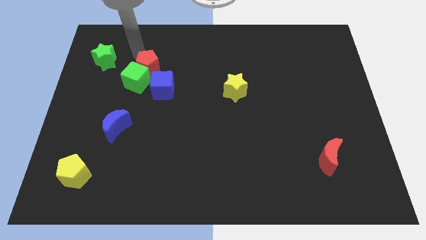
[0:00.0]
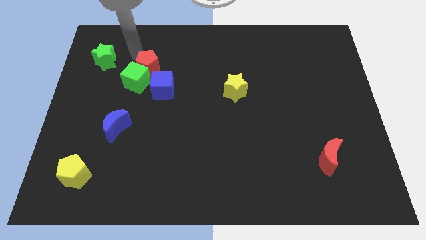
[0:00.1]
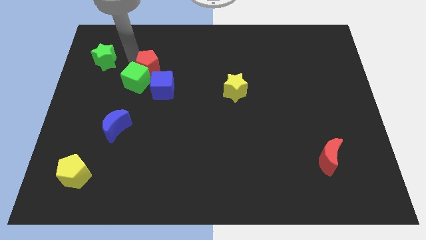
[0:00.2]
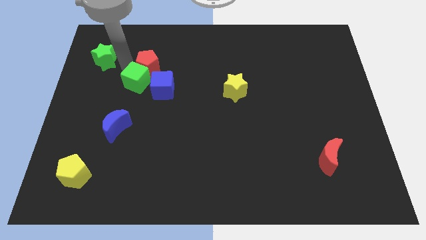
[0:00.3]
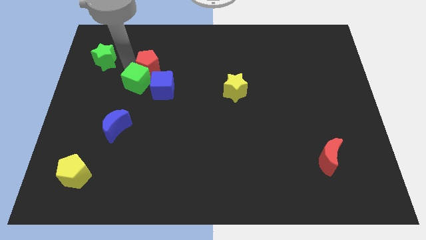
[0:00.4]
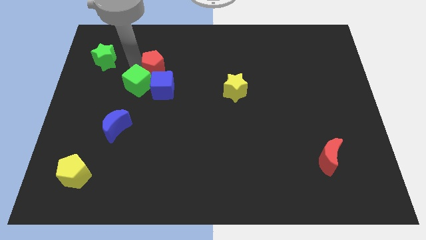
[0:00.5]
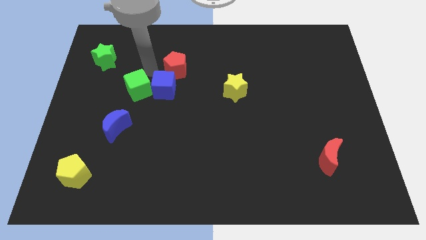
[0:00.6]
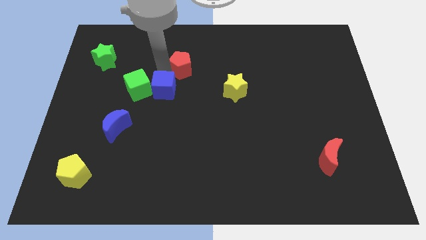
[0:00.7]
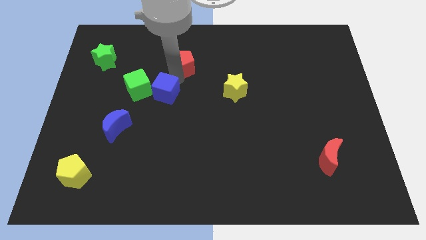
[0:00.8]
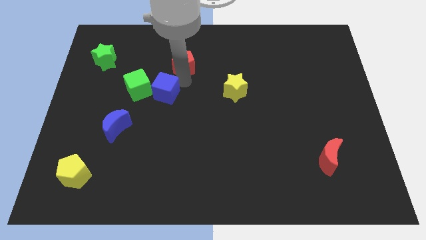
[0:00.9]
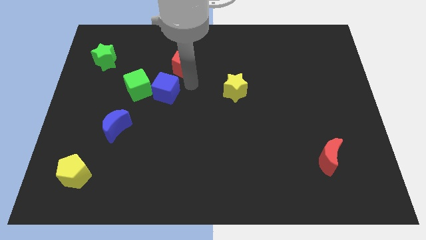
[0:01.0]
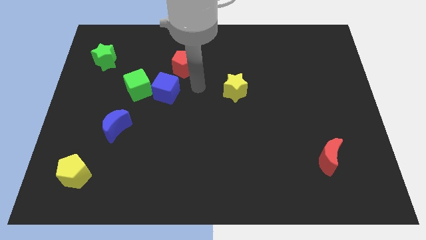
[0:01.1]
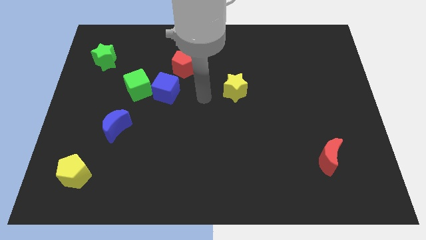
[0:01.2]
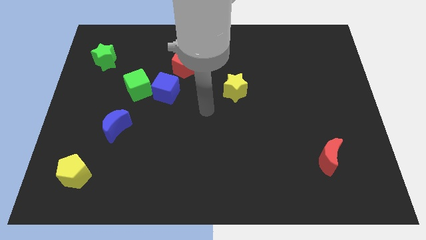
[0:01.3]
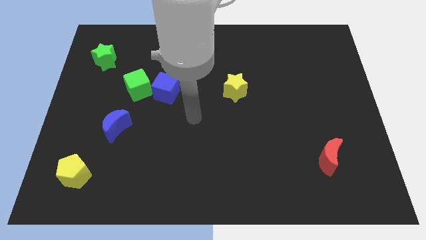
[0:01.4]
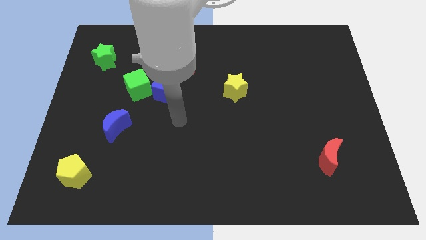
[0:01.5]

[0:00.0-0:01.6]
separate the red pentagon green cube and blue cube

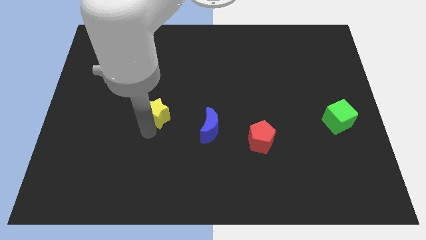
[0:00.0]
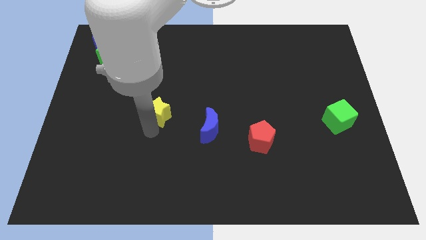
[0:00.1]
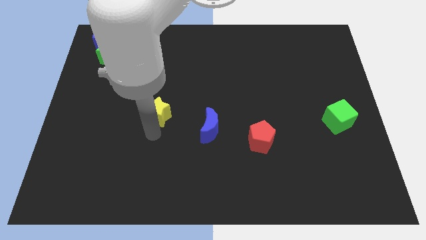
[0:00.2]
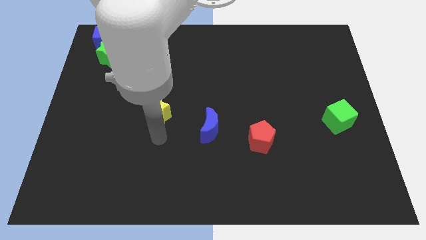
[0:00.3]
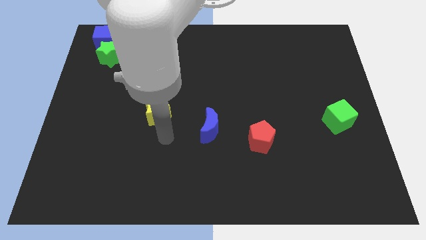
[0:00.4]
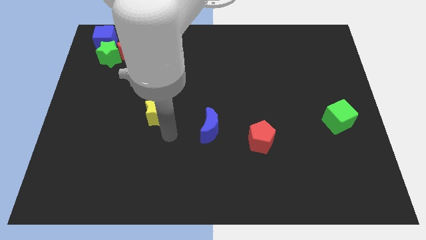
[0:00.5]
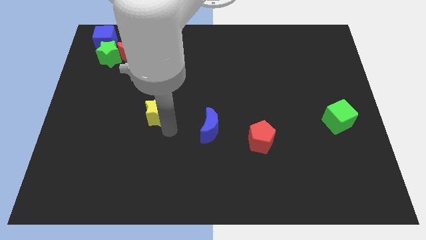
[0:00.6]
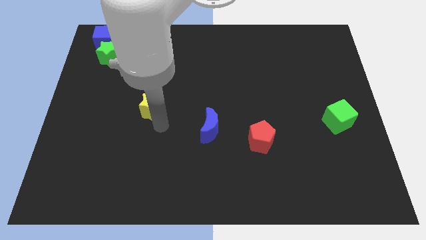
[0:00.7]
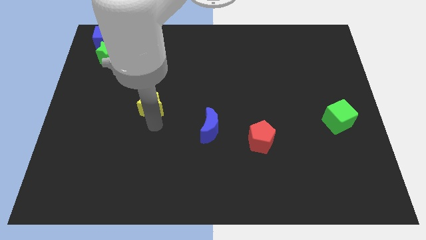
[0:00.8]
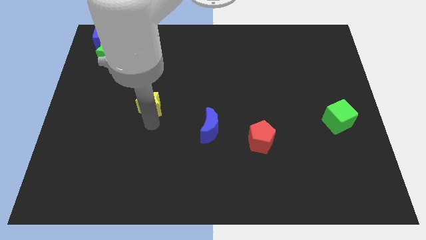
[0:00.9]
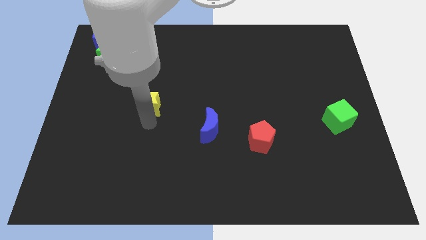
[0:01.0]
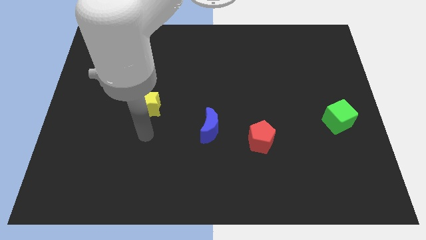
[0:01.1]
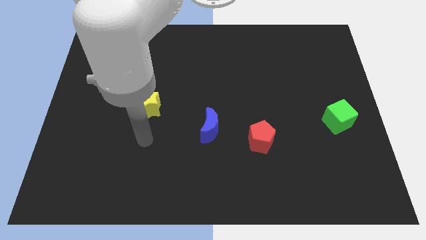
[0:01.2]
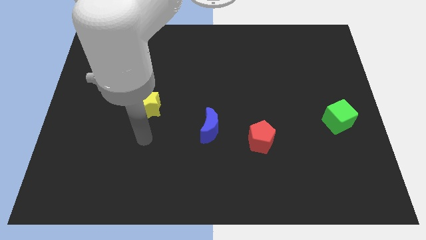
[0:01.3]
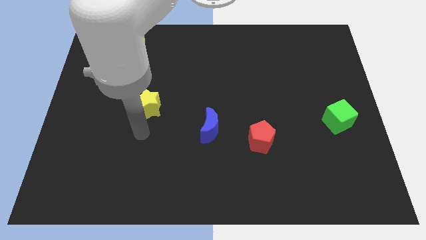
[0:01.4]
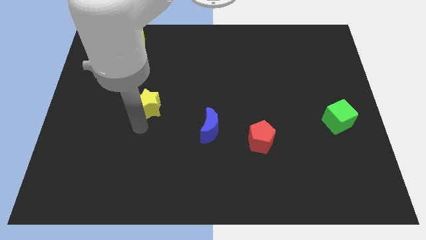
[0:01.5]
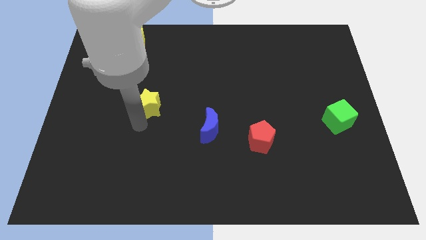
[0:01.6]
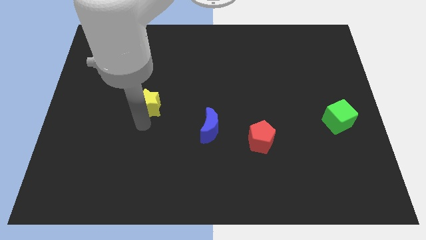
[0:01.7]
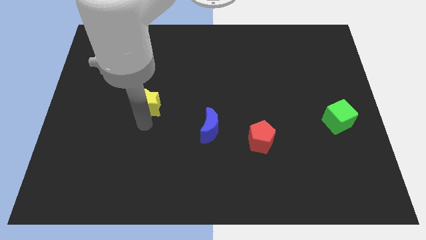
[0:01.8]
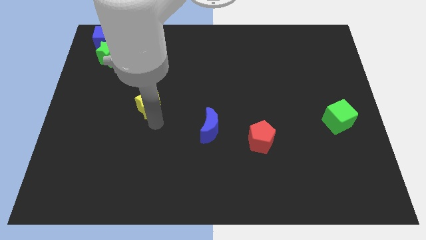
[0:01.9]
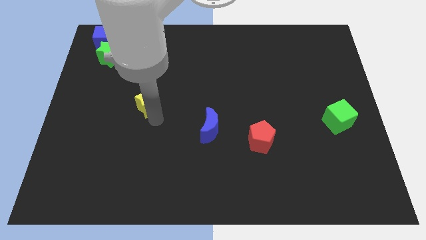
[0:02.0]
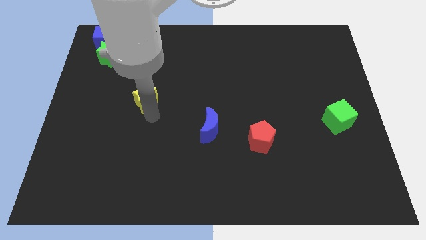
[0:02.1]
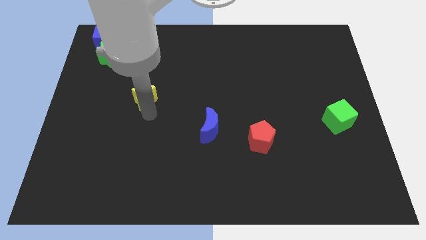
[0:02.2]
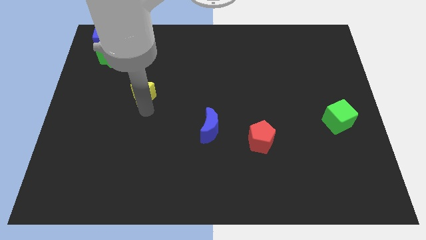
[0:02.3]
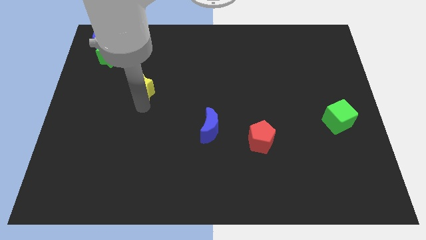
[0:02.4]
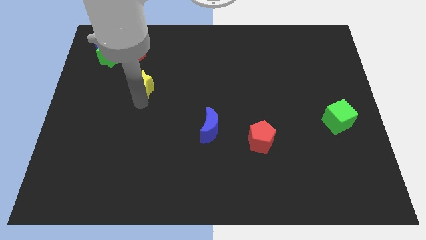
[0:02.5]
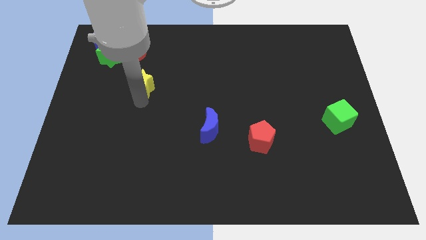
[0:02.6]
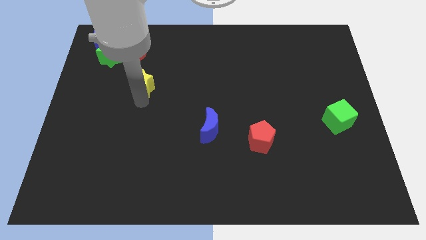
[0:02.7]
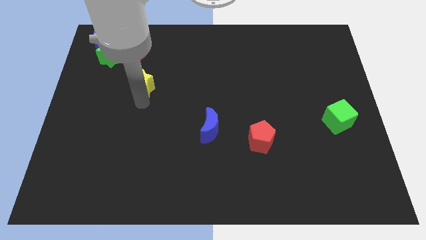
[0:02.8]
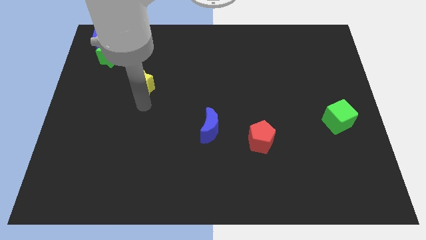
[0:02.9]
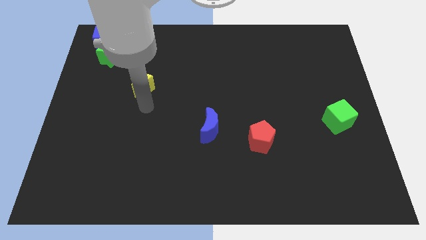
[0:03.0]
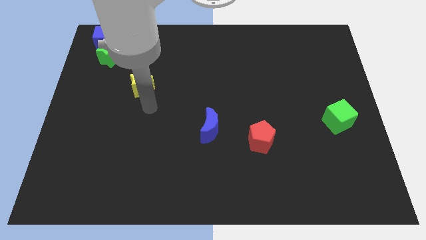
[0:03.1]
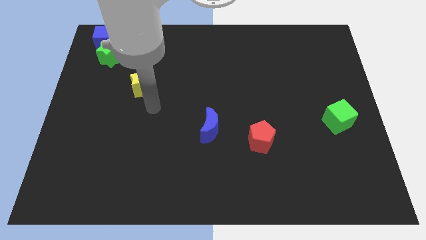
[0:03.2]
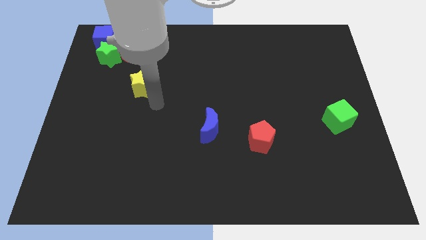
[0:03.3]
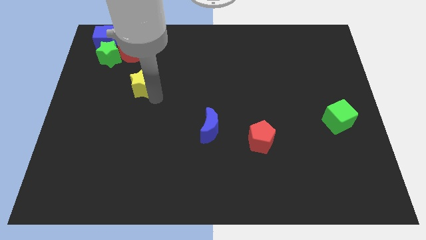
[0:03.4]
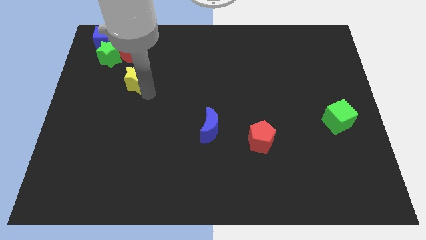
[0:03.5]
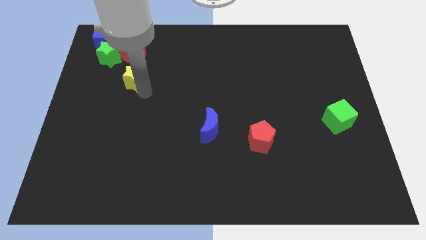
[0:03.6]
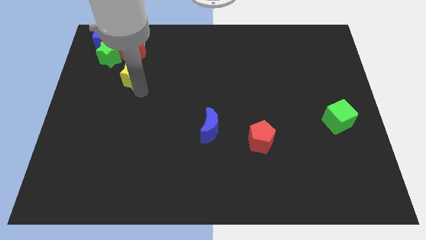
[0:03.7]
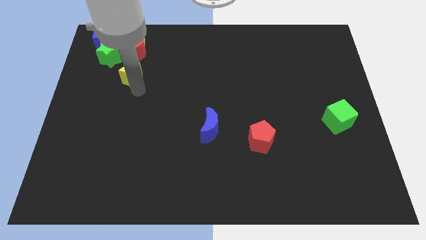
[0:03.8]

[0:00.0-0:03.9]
slide the yellow star towards the red moon

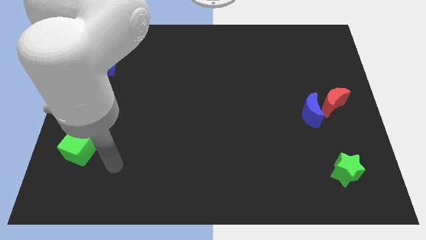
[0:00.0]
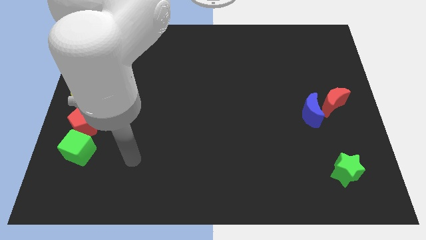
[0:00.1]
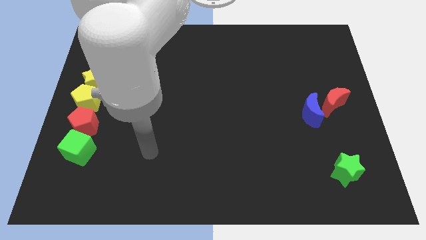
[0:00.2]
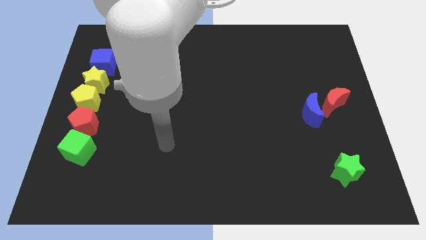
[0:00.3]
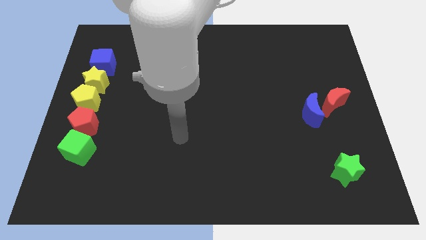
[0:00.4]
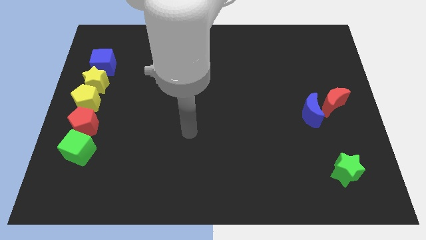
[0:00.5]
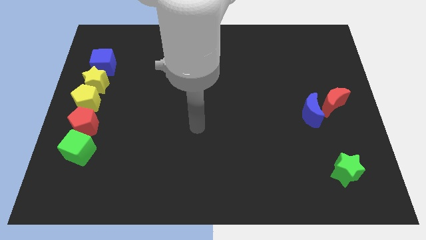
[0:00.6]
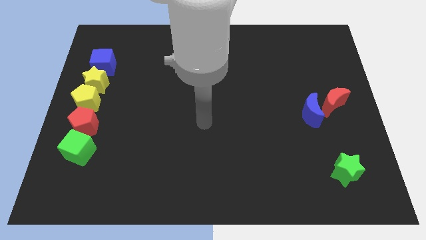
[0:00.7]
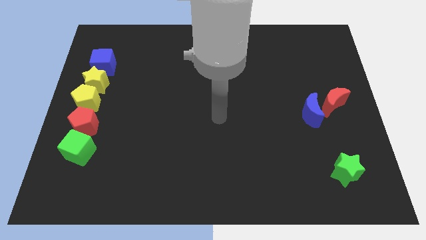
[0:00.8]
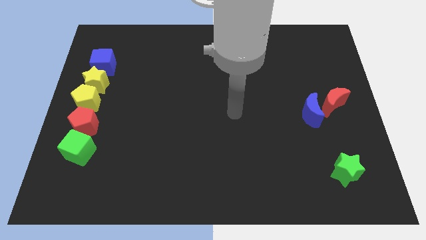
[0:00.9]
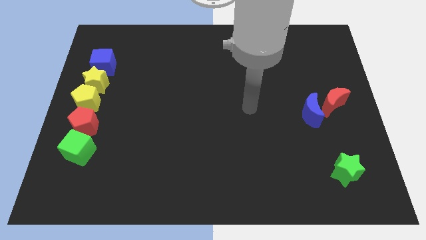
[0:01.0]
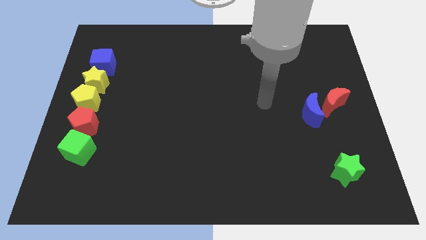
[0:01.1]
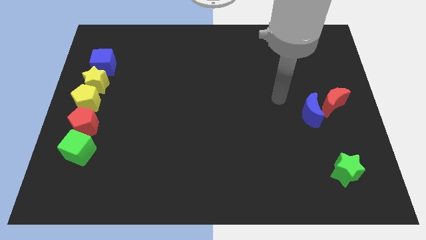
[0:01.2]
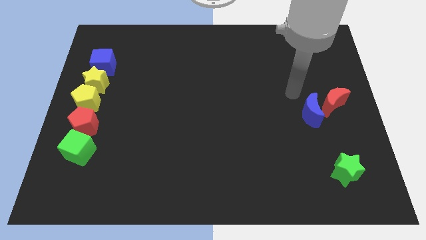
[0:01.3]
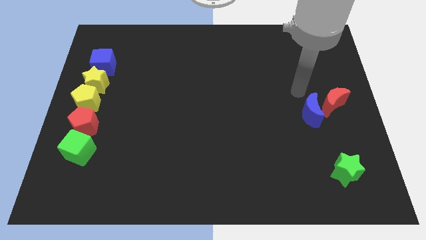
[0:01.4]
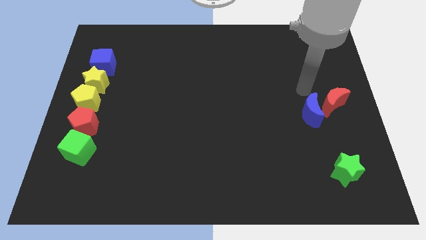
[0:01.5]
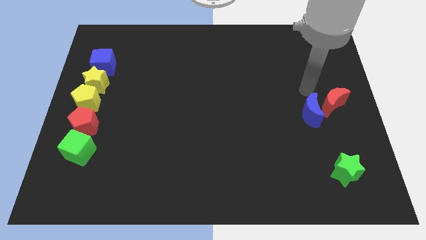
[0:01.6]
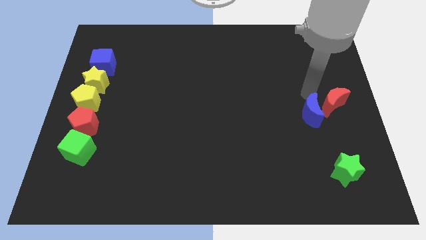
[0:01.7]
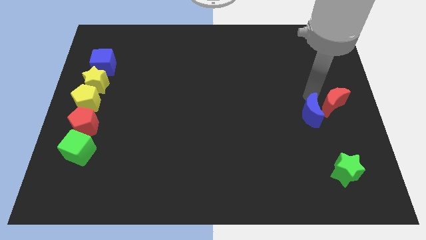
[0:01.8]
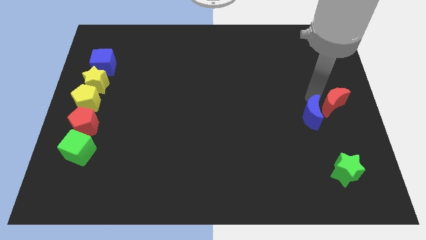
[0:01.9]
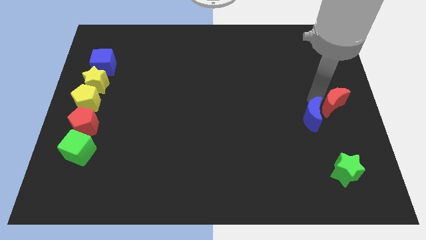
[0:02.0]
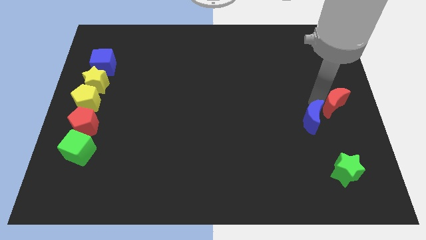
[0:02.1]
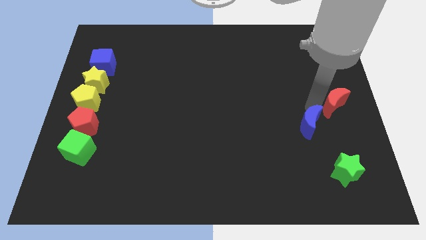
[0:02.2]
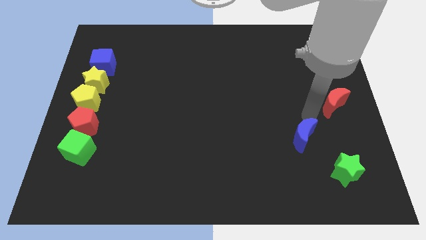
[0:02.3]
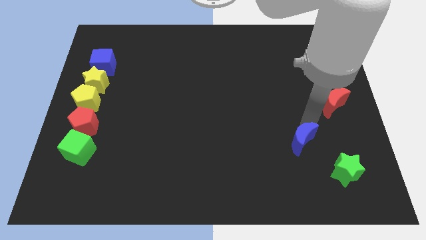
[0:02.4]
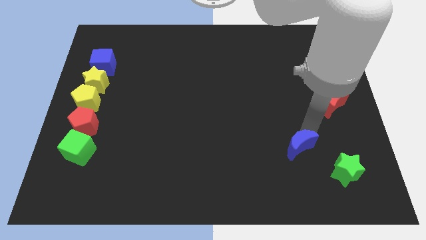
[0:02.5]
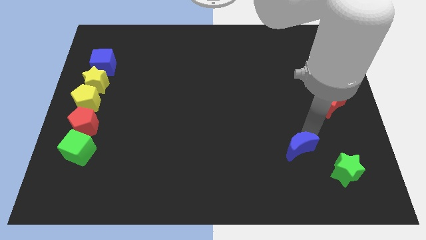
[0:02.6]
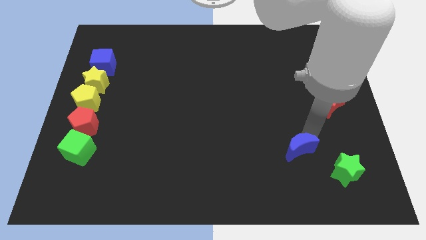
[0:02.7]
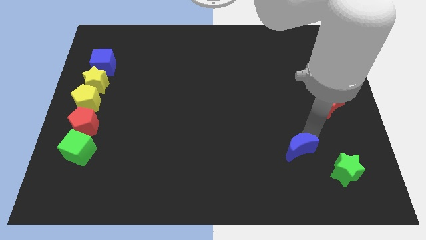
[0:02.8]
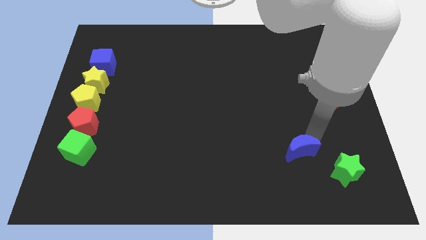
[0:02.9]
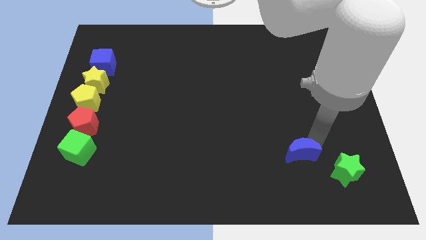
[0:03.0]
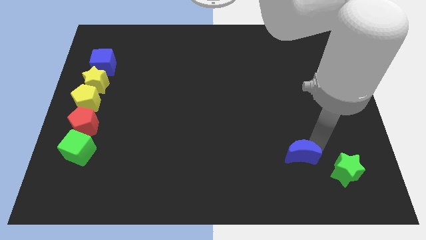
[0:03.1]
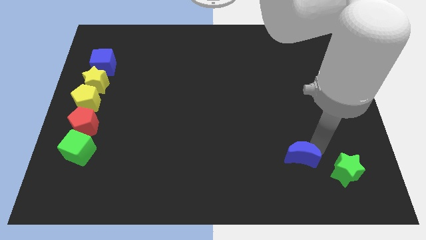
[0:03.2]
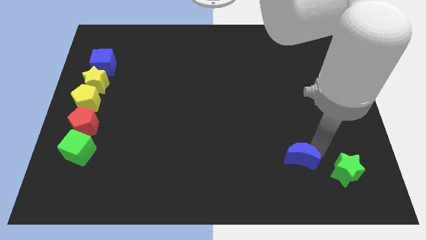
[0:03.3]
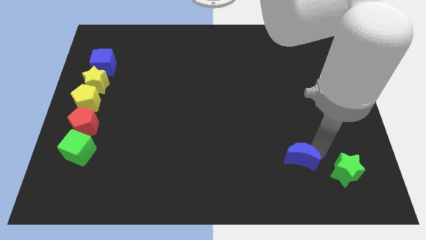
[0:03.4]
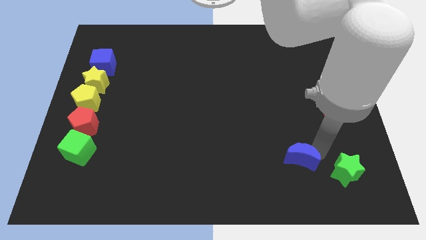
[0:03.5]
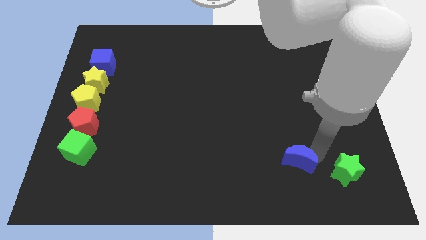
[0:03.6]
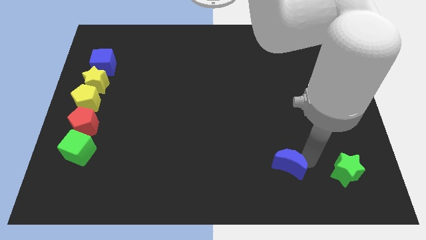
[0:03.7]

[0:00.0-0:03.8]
move the blue crescent left to the green star
